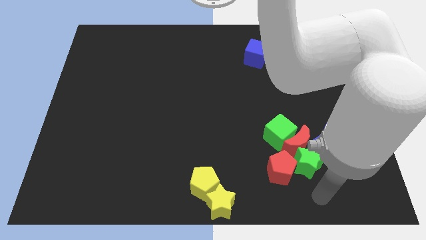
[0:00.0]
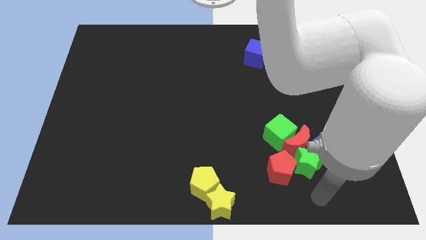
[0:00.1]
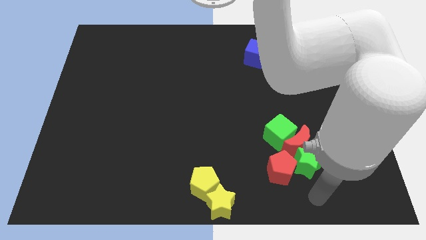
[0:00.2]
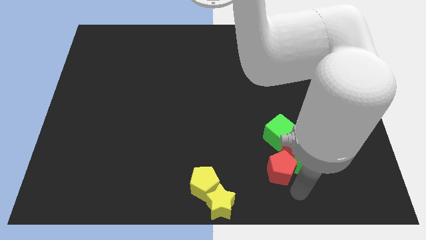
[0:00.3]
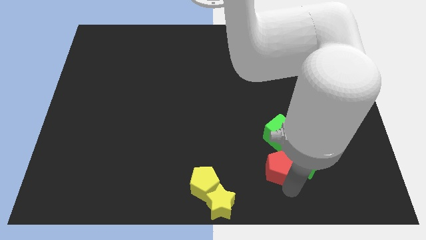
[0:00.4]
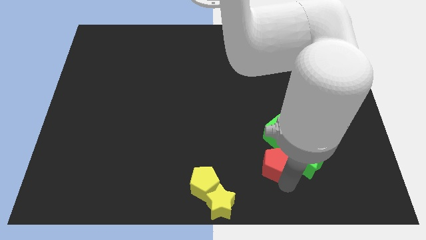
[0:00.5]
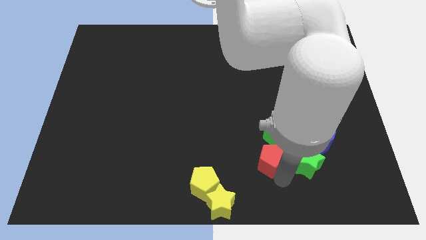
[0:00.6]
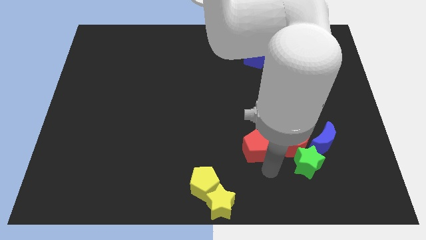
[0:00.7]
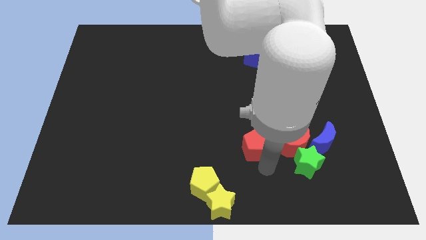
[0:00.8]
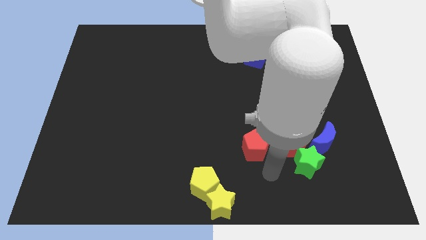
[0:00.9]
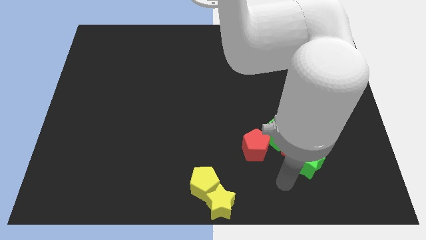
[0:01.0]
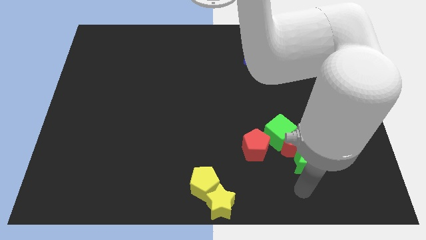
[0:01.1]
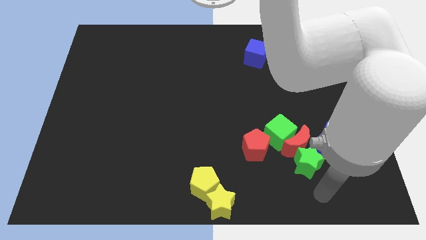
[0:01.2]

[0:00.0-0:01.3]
push the red pentagon close to the green cube

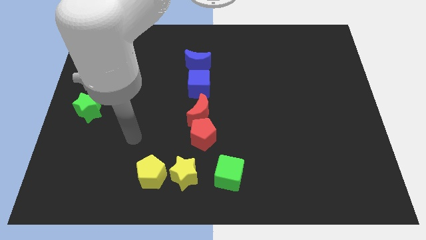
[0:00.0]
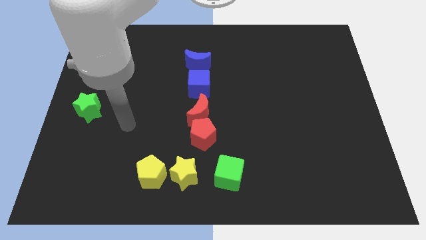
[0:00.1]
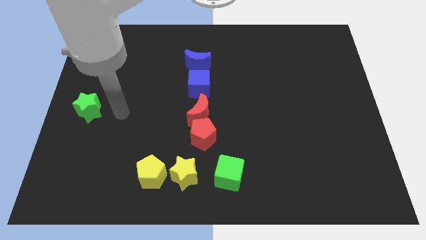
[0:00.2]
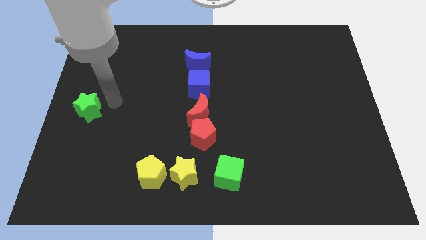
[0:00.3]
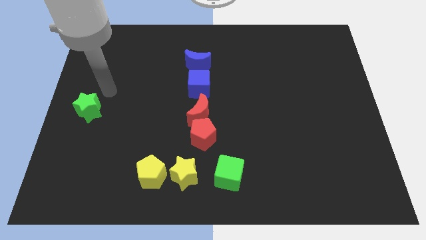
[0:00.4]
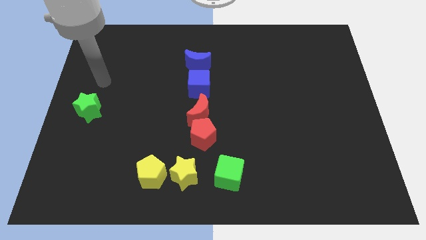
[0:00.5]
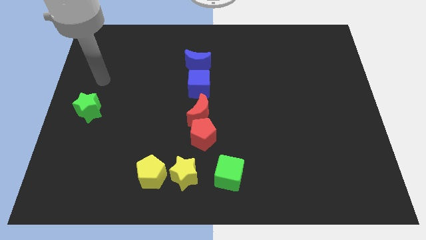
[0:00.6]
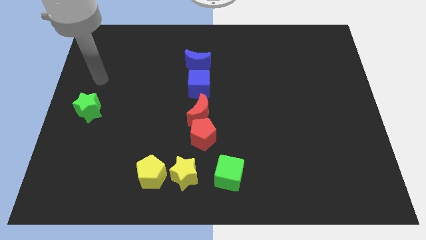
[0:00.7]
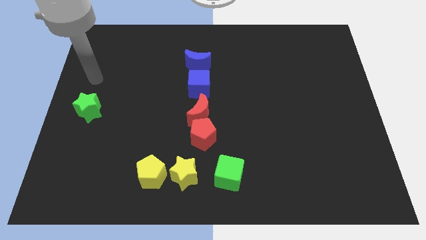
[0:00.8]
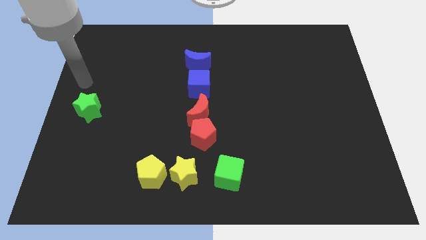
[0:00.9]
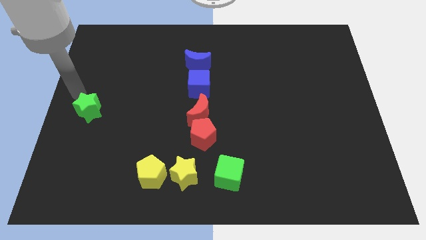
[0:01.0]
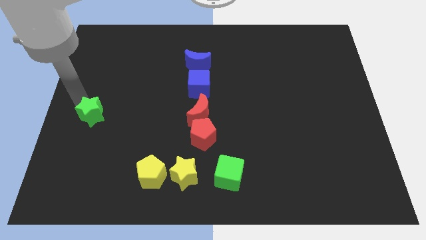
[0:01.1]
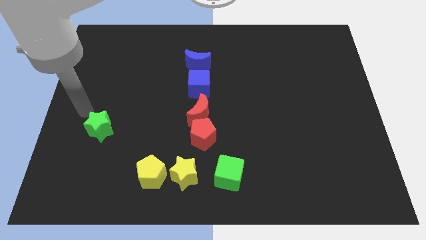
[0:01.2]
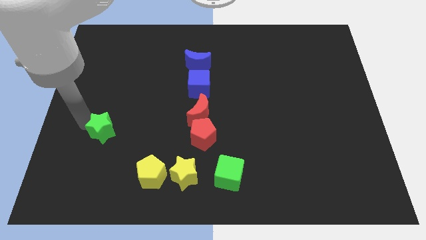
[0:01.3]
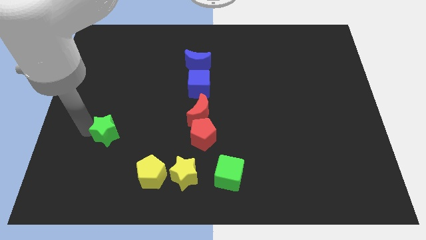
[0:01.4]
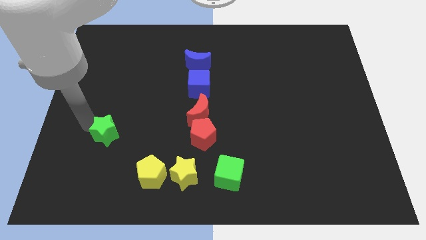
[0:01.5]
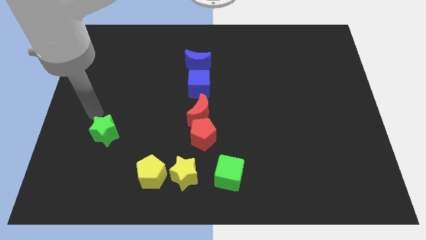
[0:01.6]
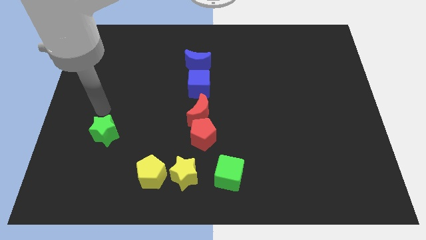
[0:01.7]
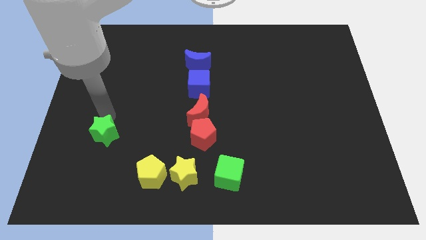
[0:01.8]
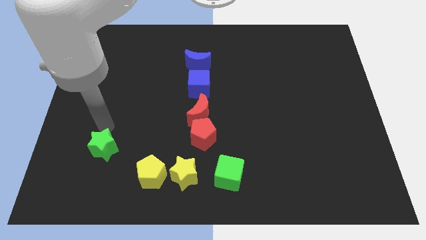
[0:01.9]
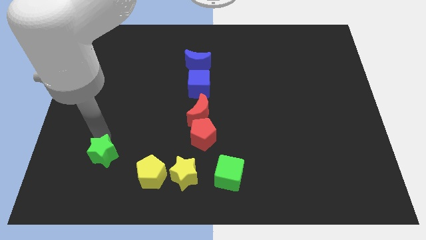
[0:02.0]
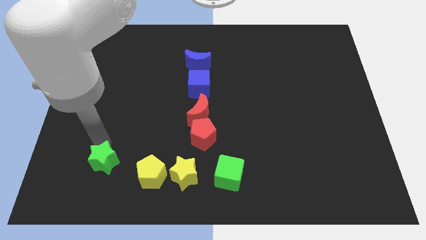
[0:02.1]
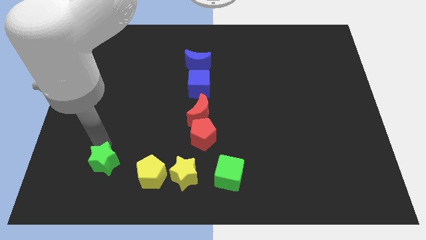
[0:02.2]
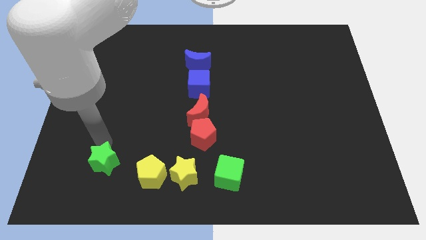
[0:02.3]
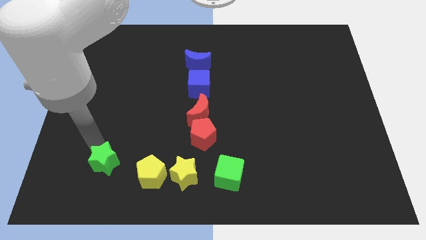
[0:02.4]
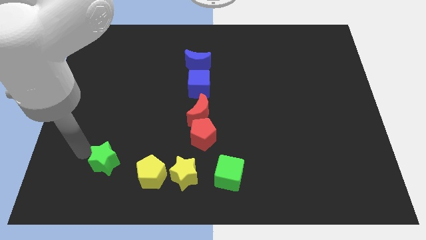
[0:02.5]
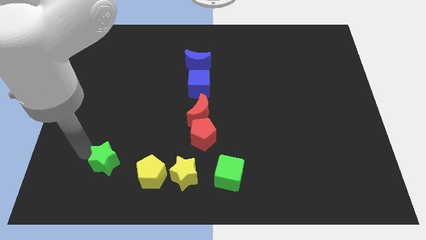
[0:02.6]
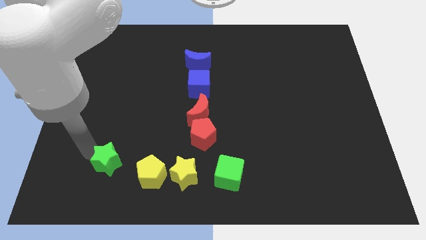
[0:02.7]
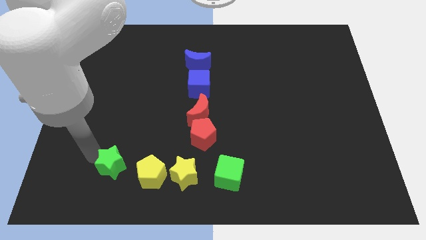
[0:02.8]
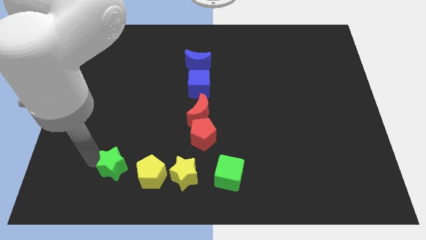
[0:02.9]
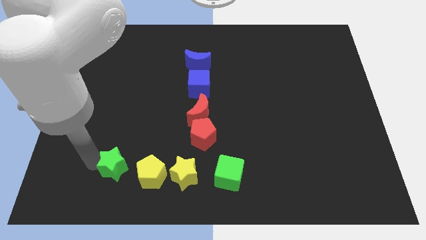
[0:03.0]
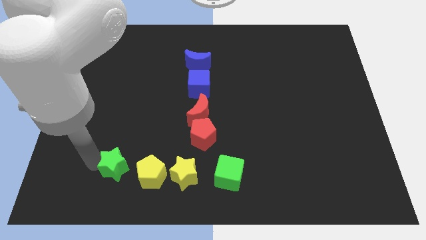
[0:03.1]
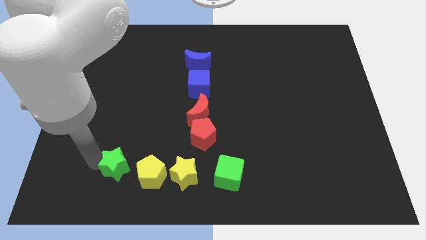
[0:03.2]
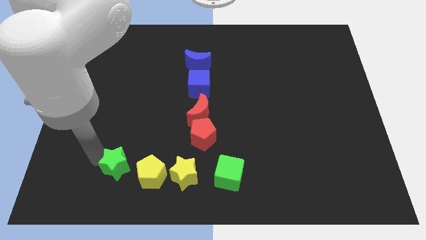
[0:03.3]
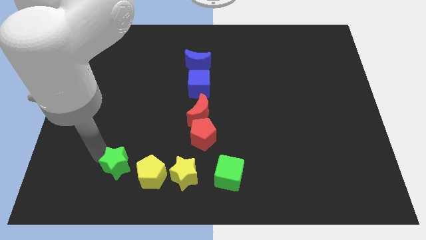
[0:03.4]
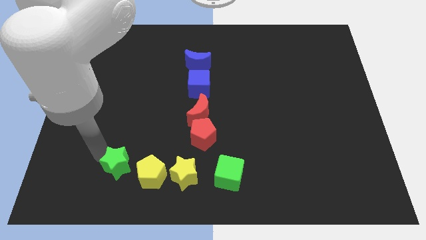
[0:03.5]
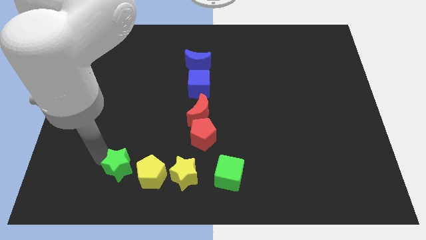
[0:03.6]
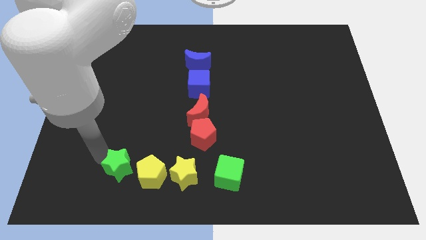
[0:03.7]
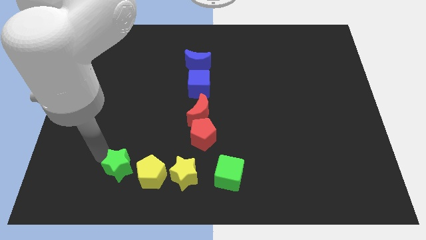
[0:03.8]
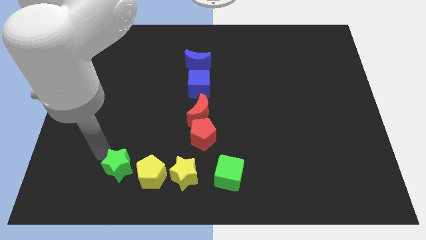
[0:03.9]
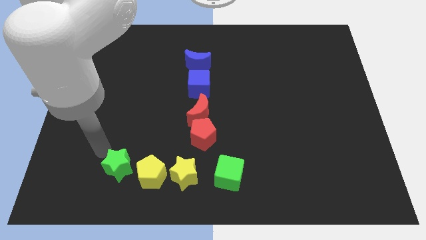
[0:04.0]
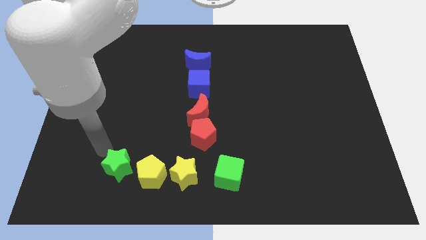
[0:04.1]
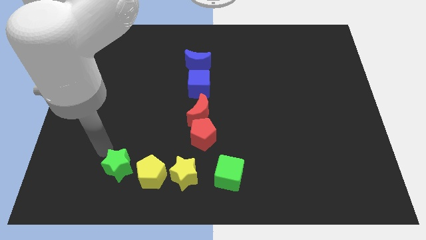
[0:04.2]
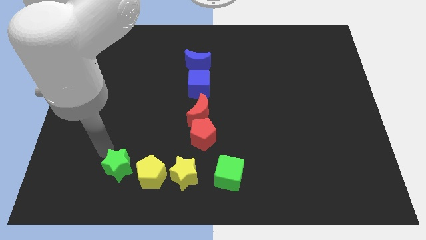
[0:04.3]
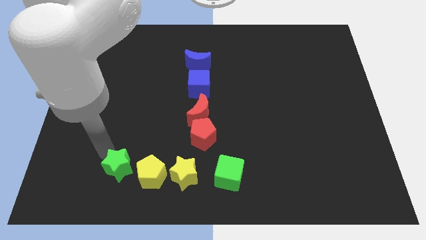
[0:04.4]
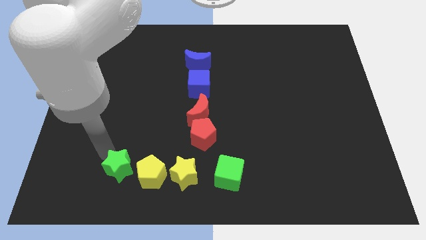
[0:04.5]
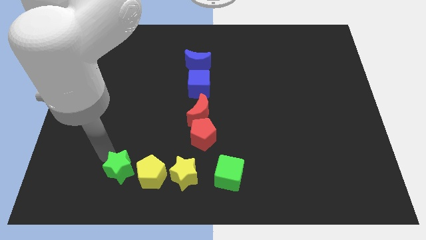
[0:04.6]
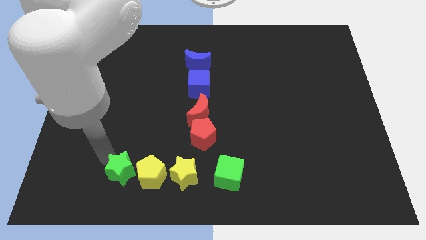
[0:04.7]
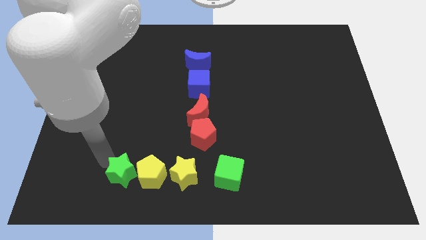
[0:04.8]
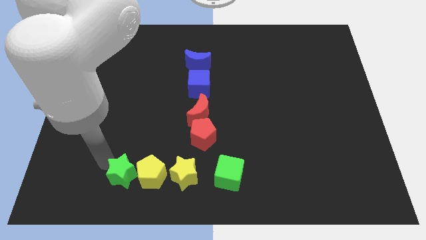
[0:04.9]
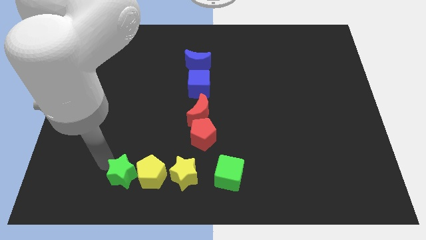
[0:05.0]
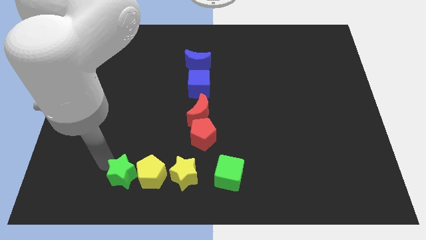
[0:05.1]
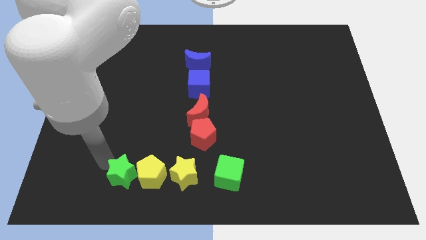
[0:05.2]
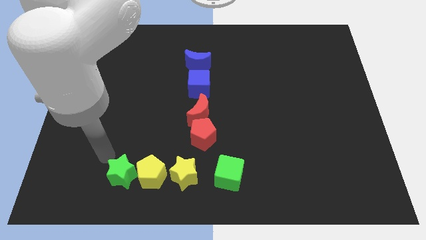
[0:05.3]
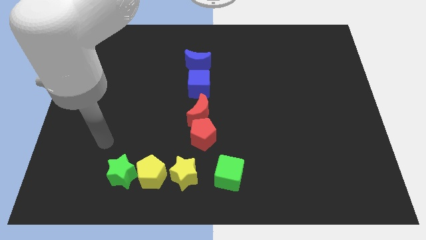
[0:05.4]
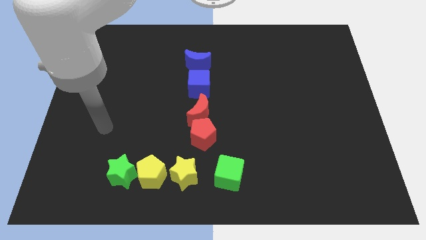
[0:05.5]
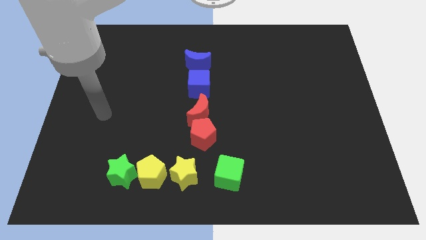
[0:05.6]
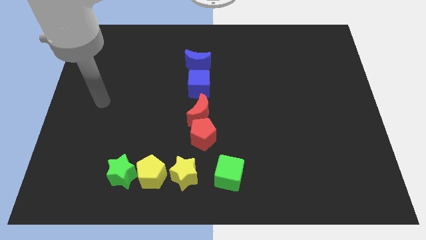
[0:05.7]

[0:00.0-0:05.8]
push the green star into the yellow pentagon

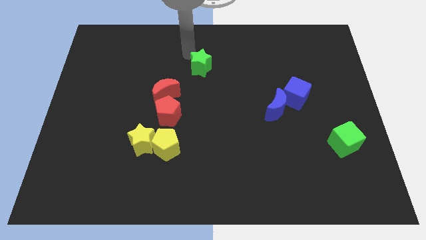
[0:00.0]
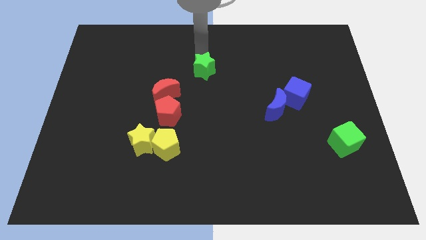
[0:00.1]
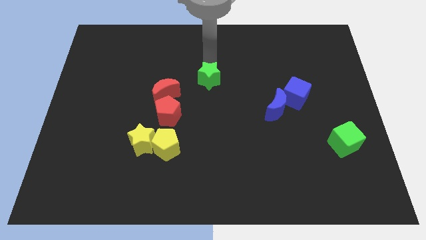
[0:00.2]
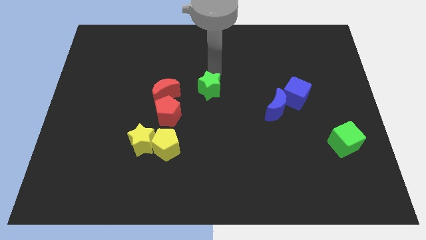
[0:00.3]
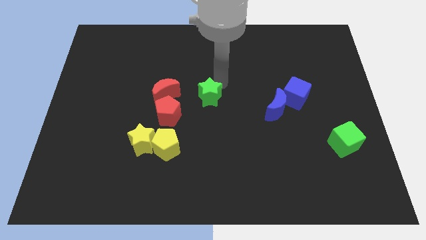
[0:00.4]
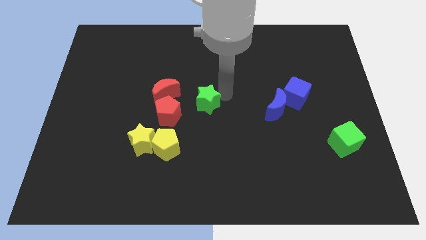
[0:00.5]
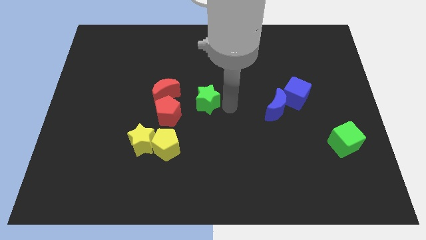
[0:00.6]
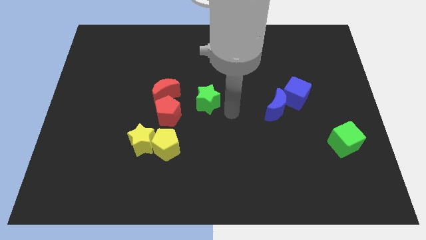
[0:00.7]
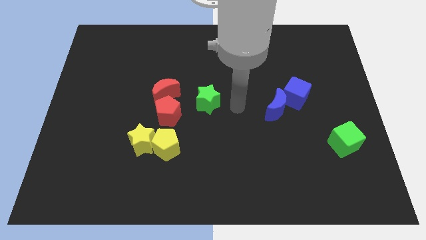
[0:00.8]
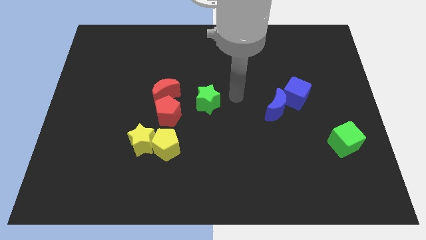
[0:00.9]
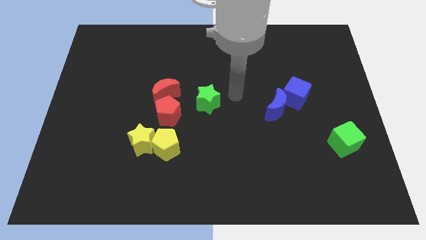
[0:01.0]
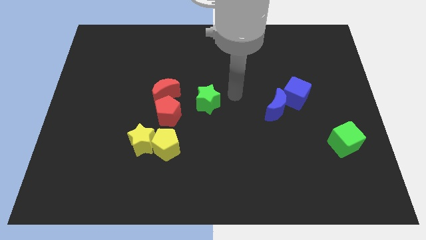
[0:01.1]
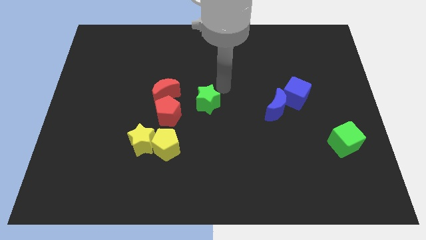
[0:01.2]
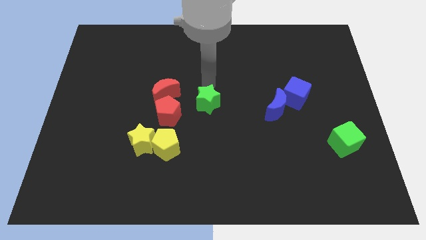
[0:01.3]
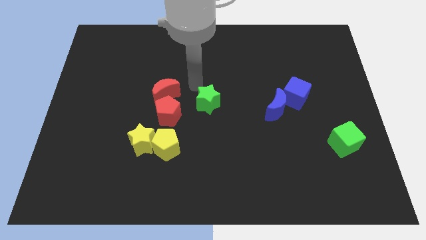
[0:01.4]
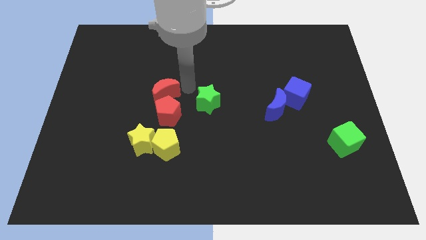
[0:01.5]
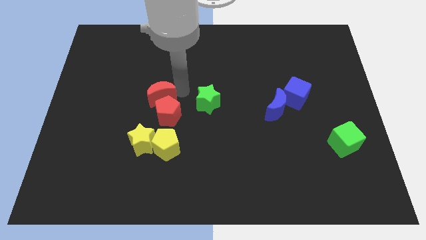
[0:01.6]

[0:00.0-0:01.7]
put the green star at the center of the board
